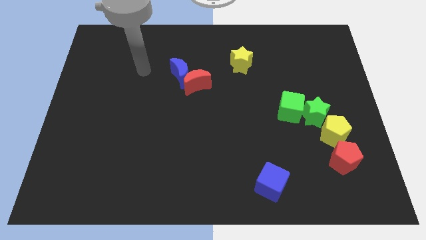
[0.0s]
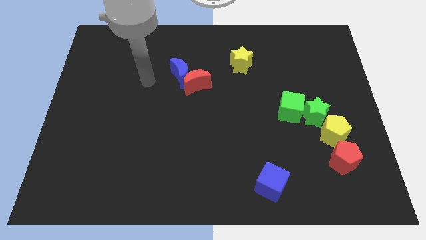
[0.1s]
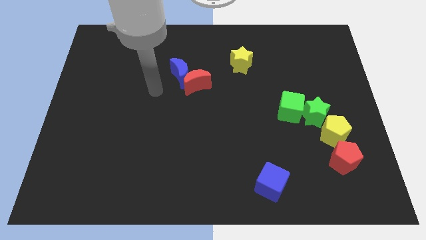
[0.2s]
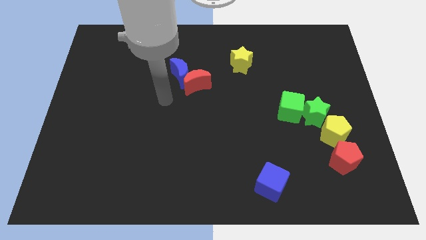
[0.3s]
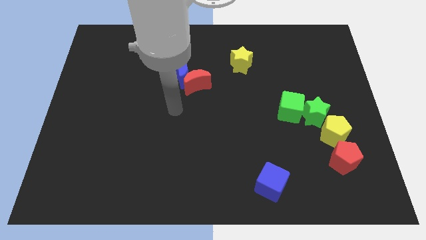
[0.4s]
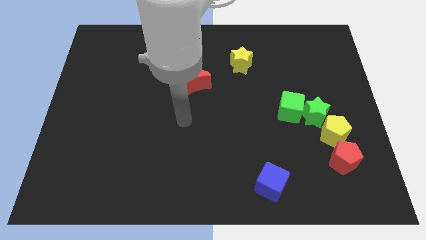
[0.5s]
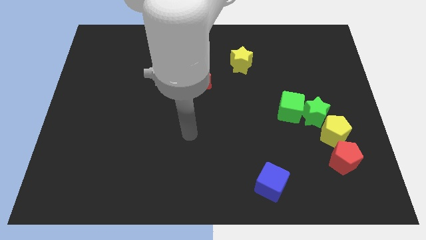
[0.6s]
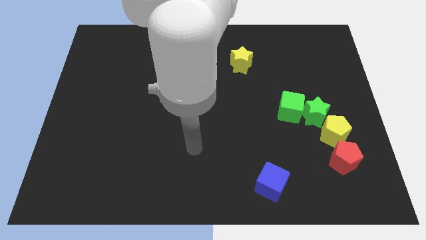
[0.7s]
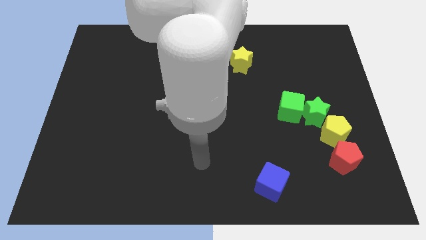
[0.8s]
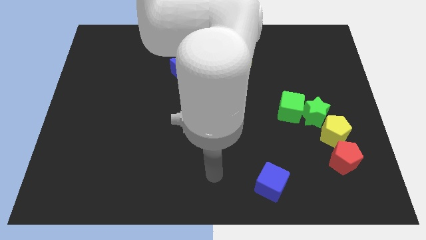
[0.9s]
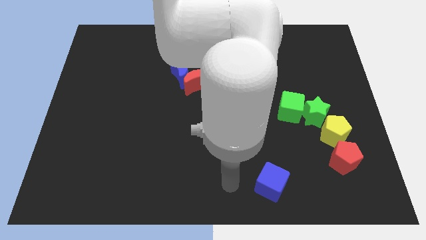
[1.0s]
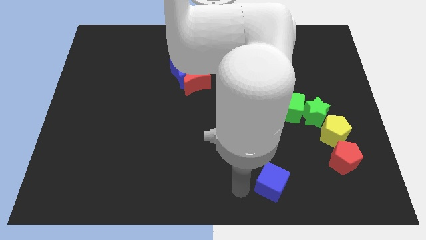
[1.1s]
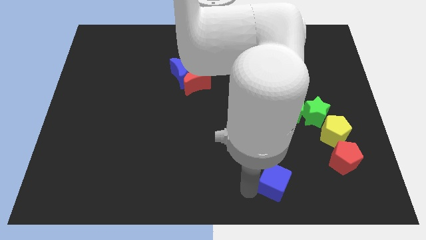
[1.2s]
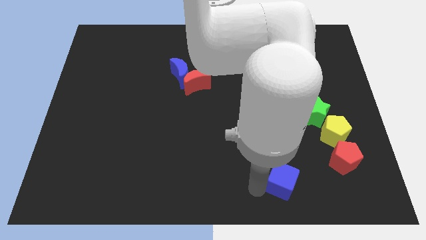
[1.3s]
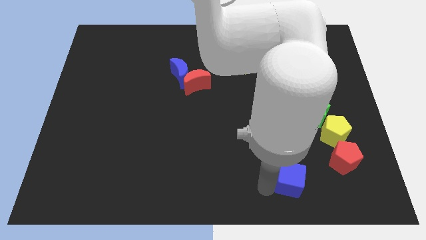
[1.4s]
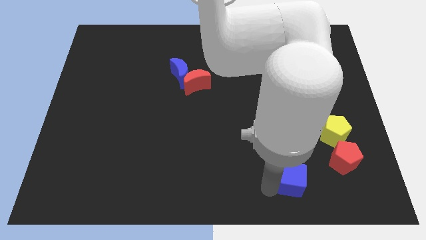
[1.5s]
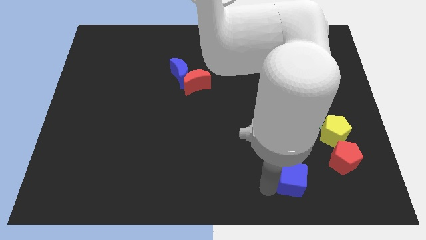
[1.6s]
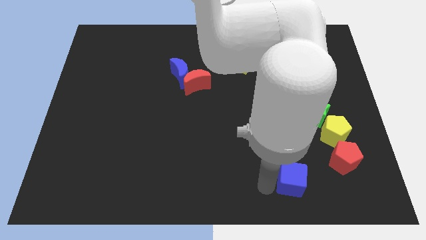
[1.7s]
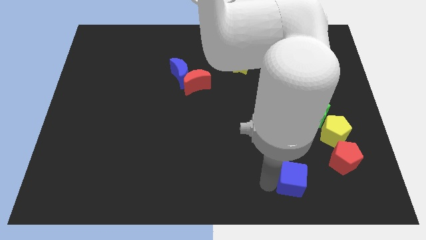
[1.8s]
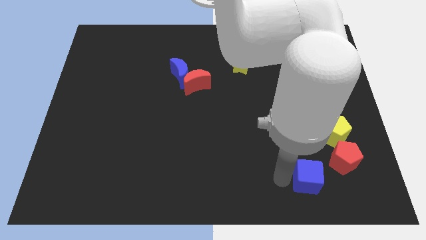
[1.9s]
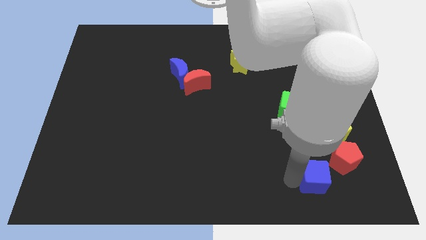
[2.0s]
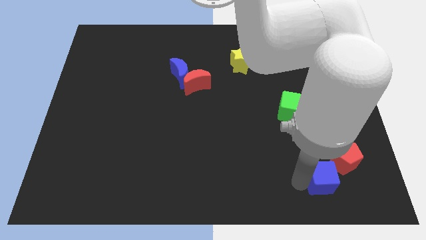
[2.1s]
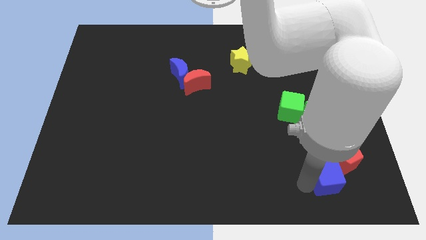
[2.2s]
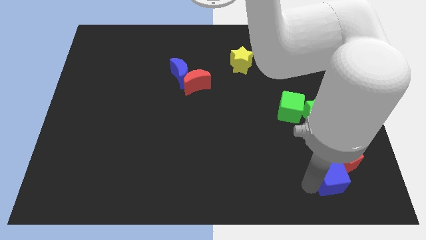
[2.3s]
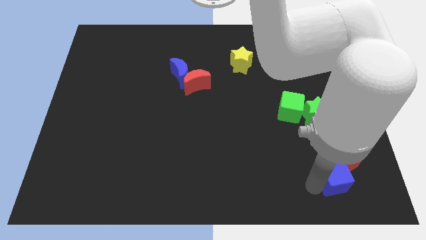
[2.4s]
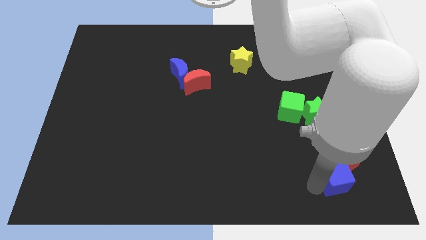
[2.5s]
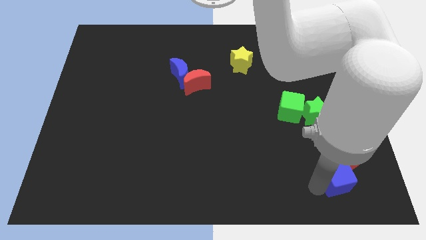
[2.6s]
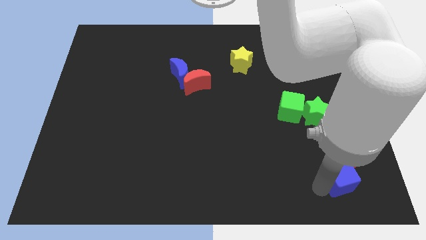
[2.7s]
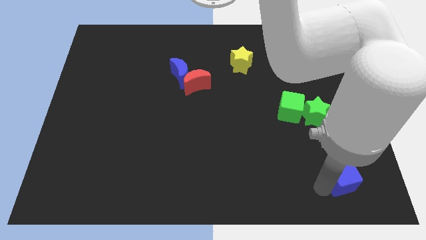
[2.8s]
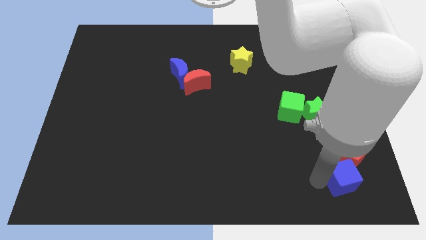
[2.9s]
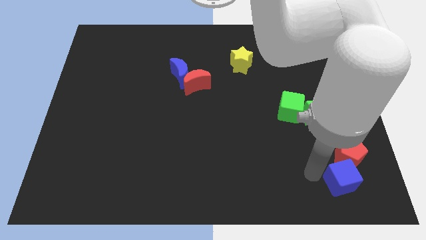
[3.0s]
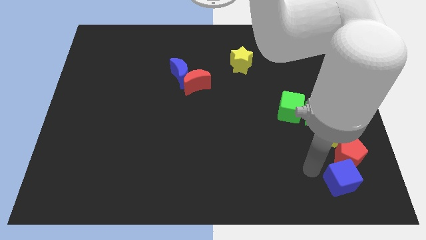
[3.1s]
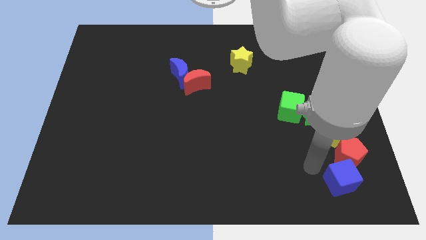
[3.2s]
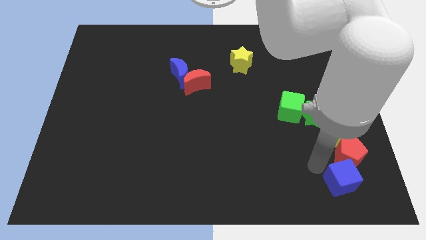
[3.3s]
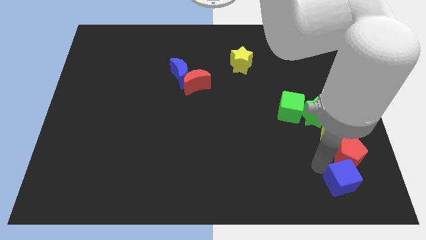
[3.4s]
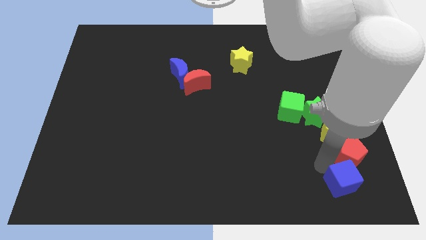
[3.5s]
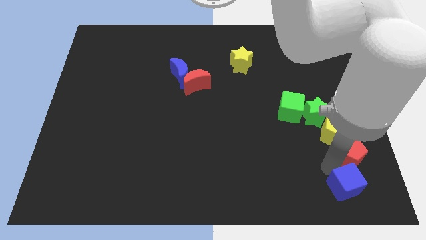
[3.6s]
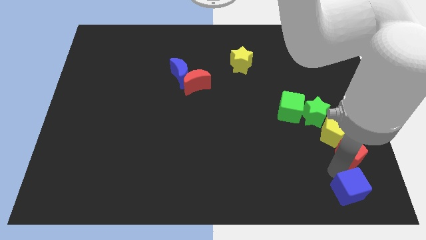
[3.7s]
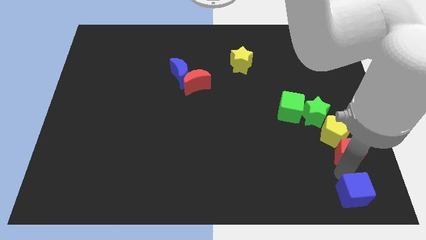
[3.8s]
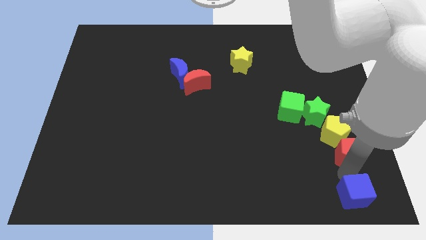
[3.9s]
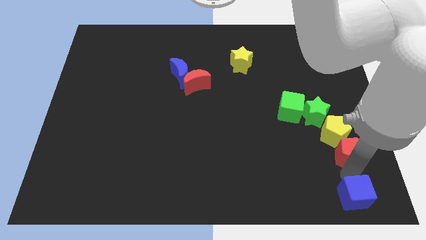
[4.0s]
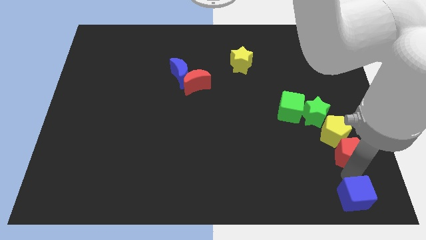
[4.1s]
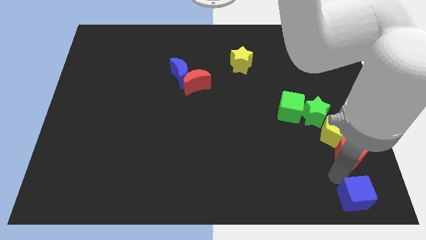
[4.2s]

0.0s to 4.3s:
move the blue cube closer to the red pentagon

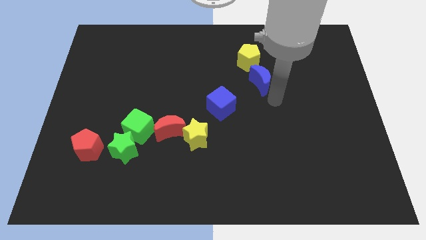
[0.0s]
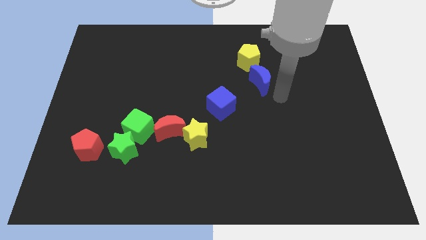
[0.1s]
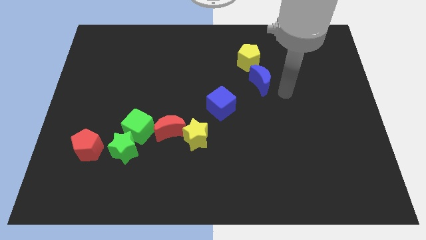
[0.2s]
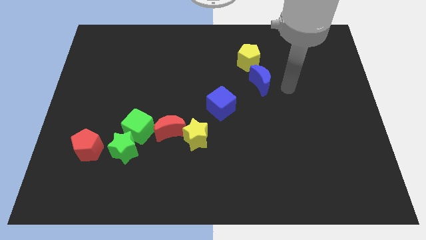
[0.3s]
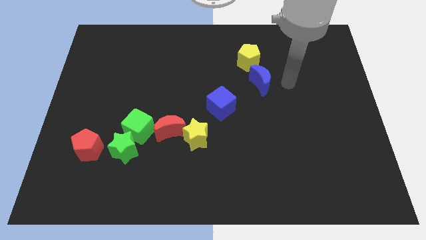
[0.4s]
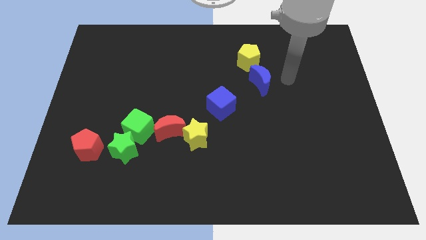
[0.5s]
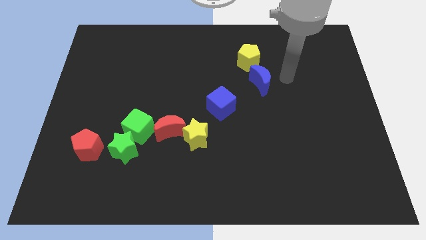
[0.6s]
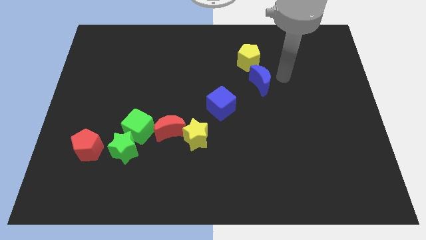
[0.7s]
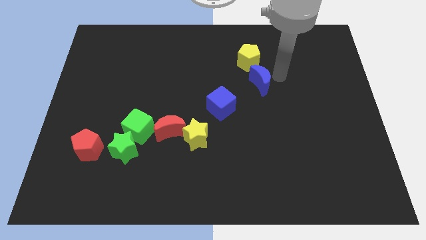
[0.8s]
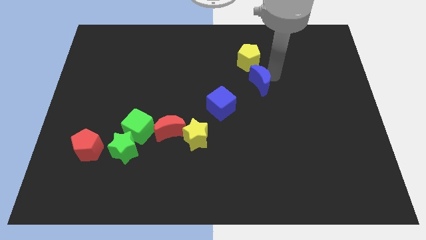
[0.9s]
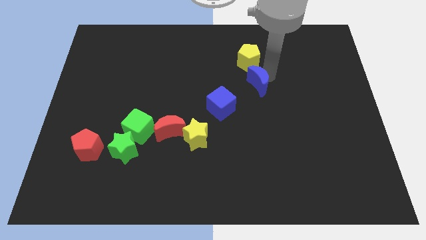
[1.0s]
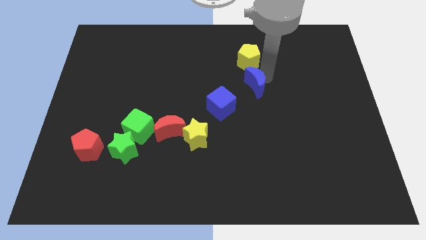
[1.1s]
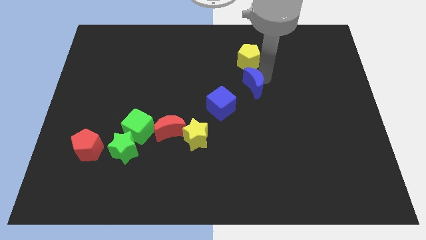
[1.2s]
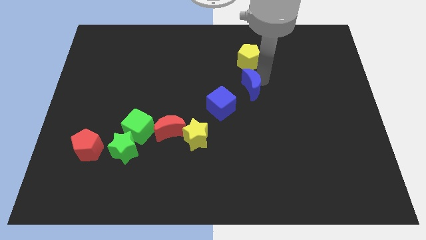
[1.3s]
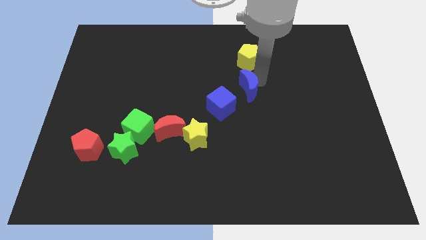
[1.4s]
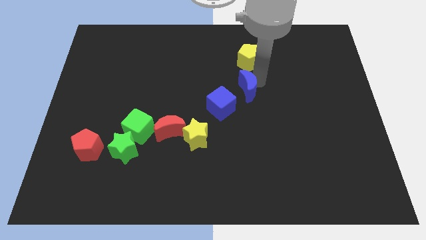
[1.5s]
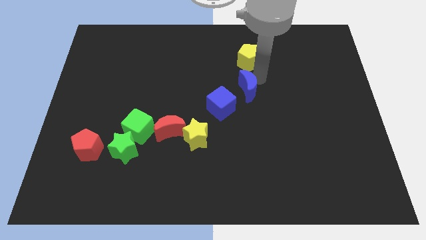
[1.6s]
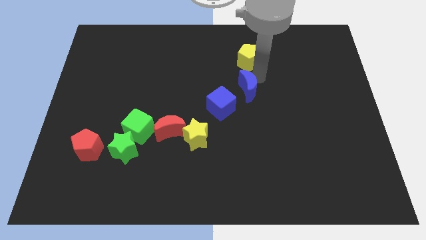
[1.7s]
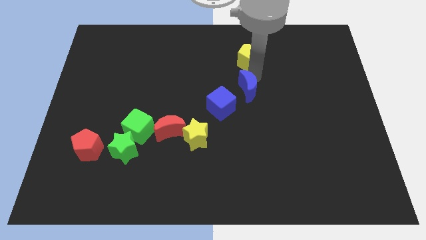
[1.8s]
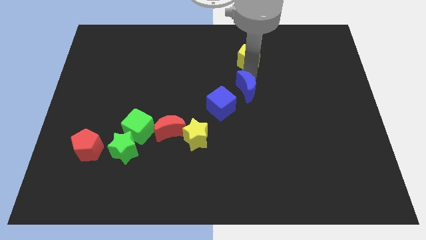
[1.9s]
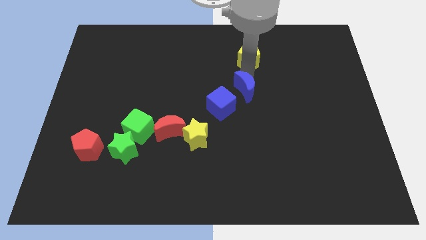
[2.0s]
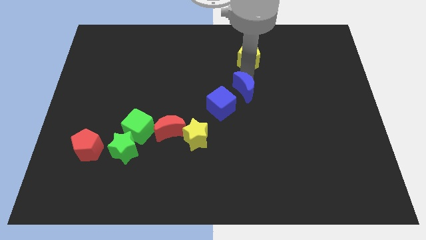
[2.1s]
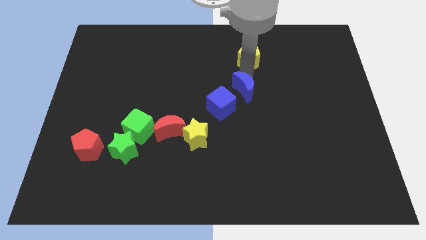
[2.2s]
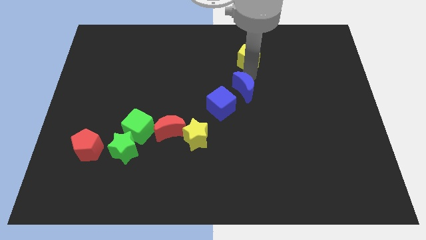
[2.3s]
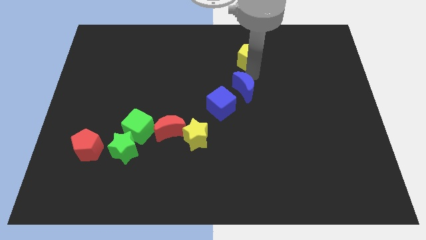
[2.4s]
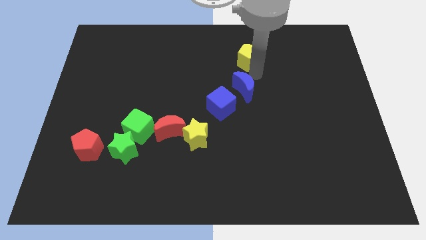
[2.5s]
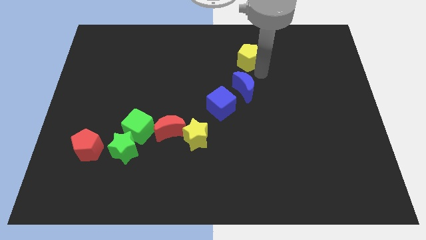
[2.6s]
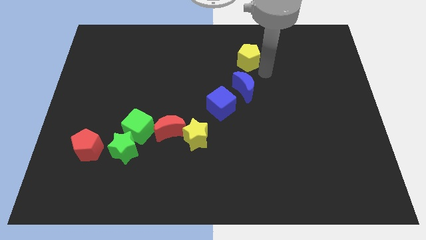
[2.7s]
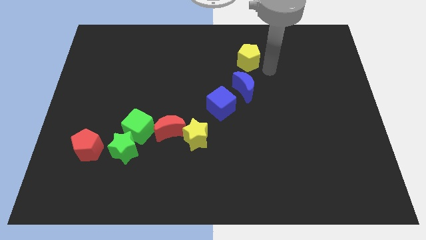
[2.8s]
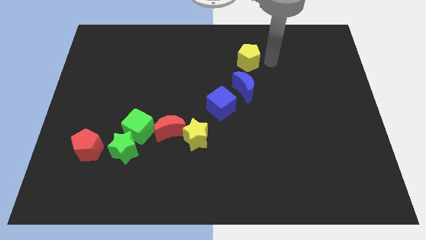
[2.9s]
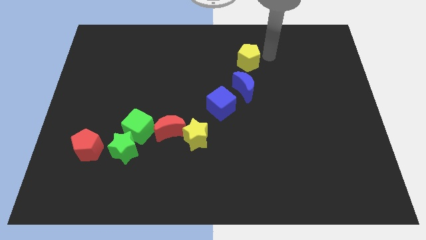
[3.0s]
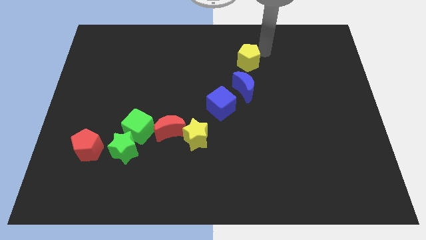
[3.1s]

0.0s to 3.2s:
move the blue crescent below to the yellow pentagon

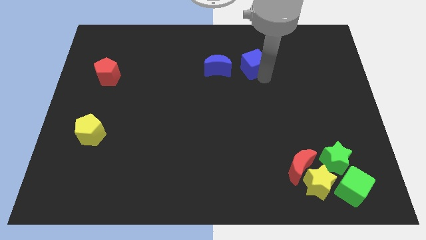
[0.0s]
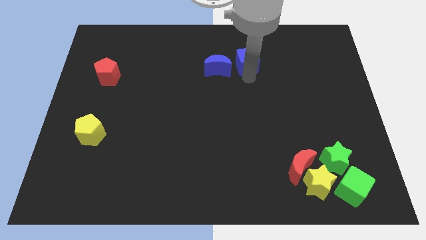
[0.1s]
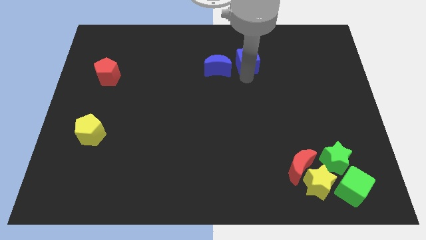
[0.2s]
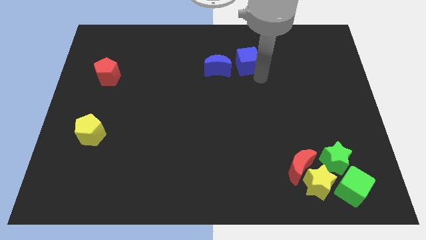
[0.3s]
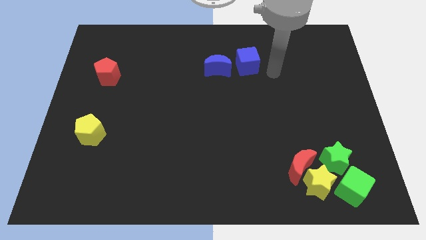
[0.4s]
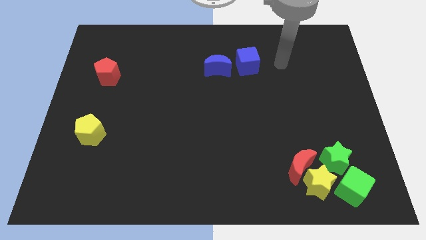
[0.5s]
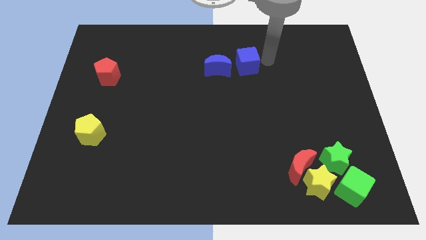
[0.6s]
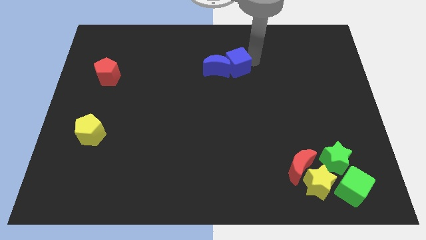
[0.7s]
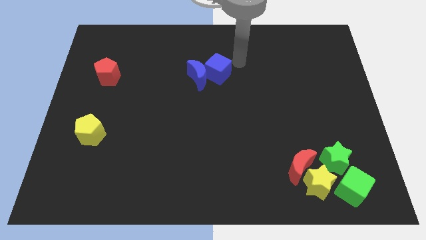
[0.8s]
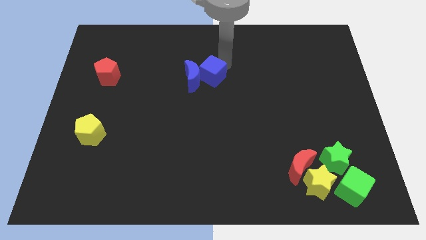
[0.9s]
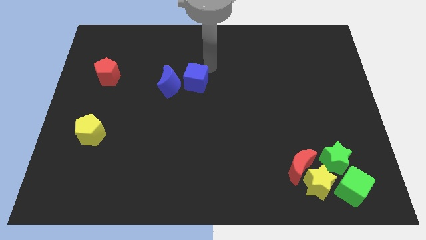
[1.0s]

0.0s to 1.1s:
push the blue cube into the blue crescent

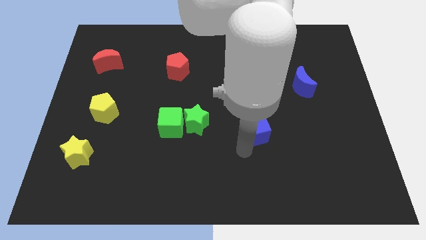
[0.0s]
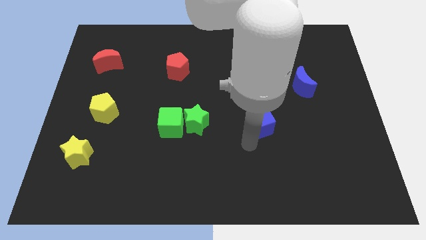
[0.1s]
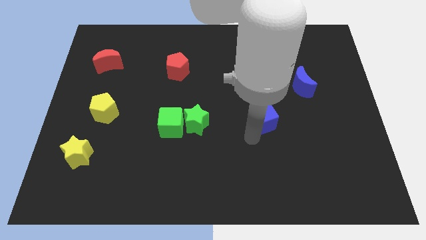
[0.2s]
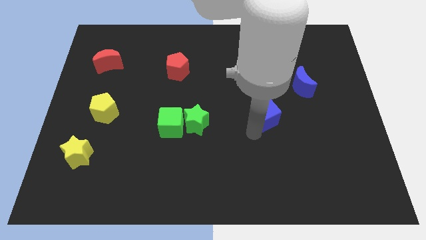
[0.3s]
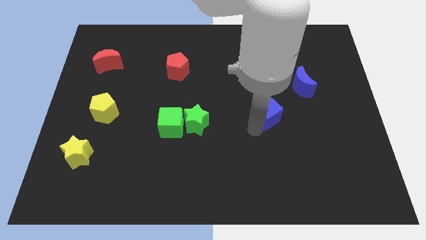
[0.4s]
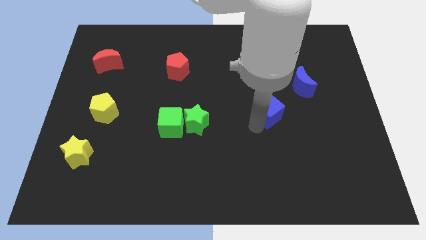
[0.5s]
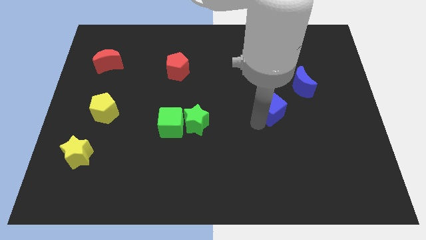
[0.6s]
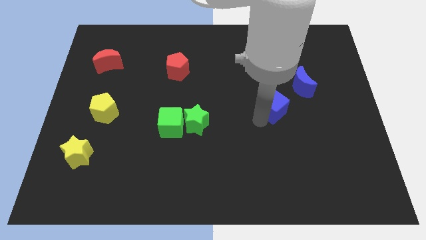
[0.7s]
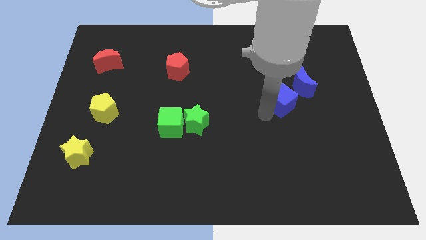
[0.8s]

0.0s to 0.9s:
move blue cube towards blue crescent
